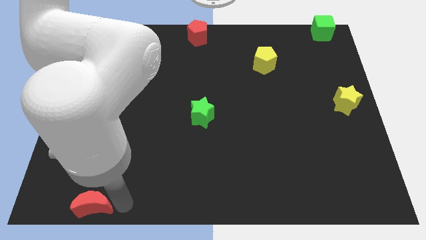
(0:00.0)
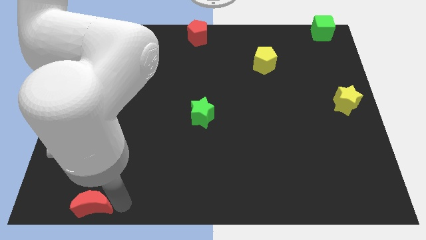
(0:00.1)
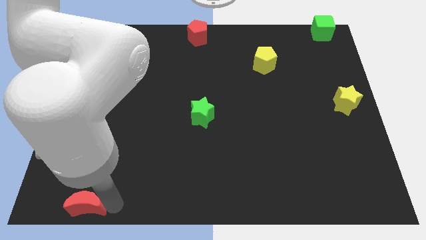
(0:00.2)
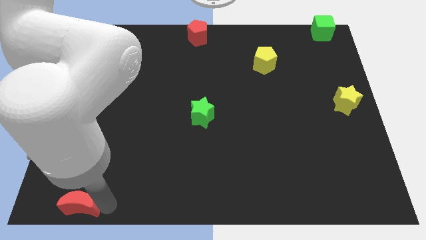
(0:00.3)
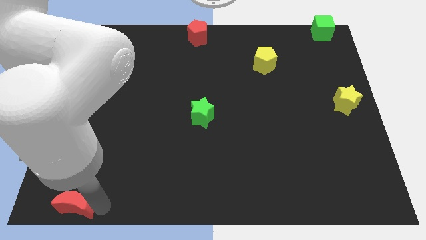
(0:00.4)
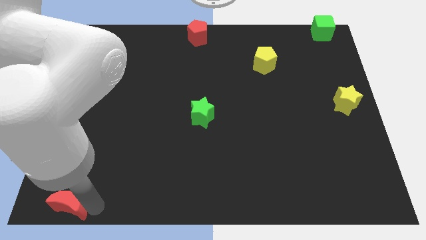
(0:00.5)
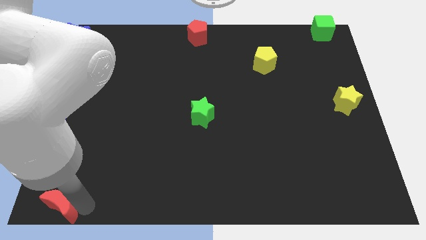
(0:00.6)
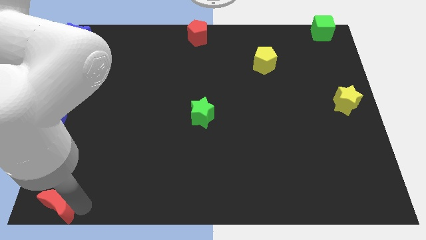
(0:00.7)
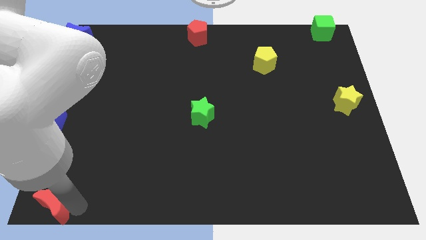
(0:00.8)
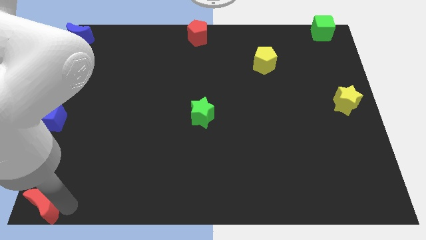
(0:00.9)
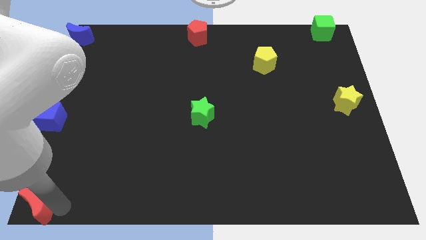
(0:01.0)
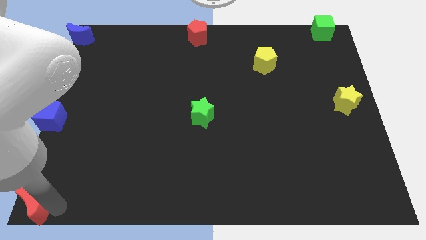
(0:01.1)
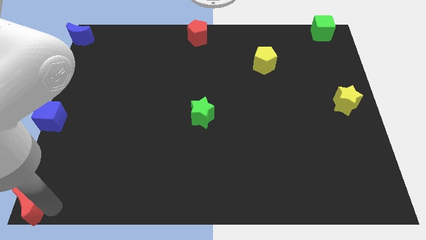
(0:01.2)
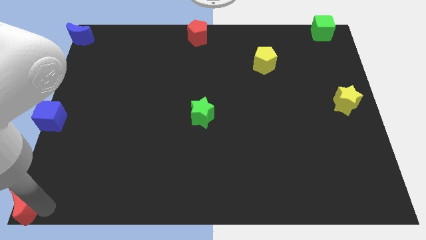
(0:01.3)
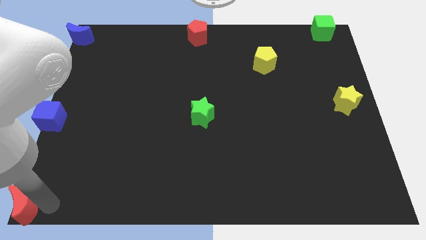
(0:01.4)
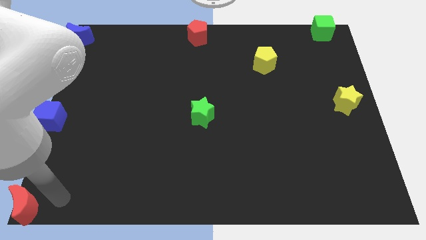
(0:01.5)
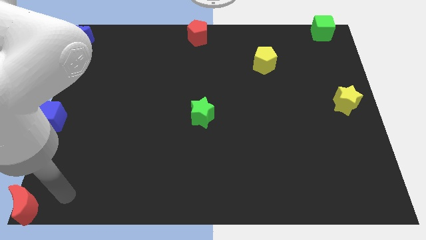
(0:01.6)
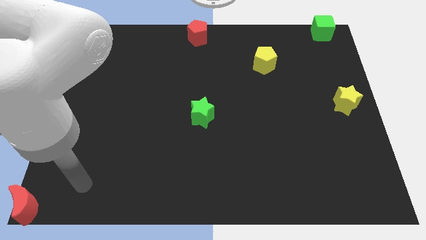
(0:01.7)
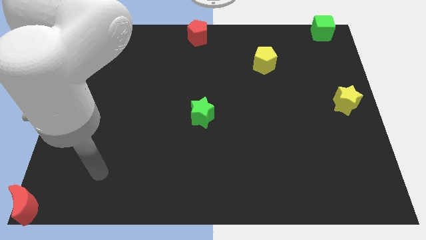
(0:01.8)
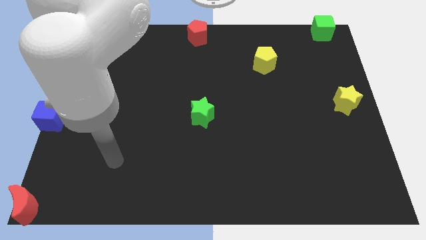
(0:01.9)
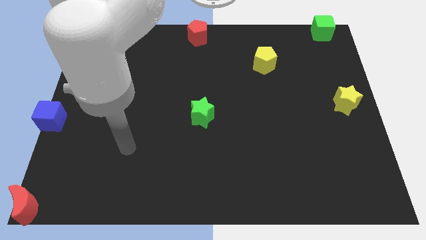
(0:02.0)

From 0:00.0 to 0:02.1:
place the red moon to the bottom left corner

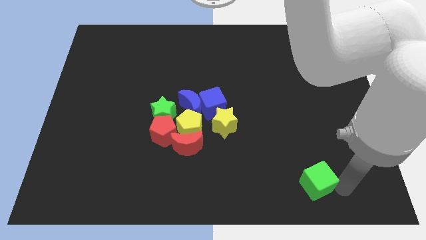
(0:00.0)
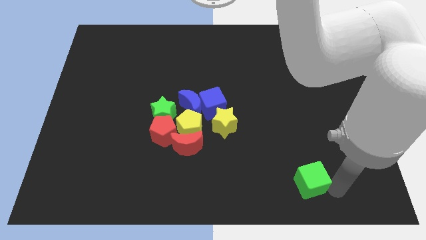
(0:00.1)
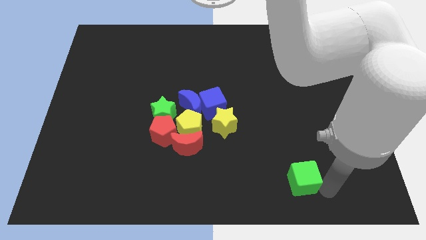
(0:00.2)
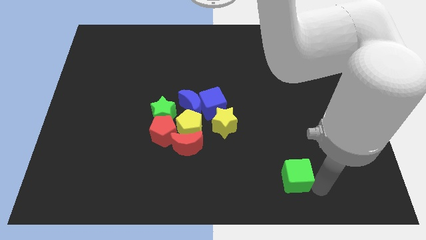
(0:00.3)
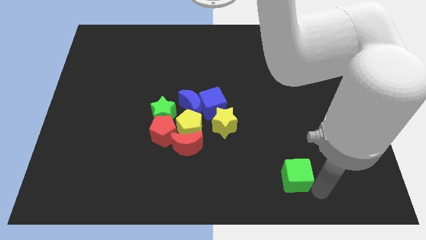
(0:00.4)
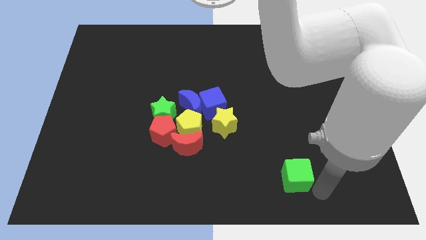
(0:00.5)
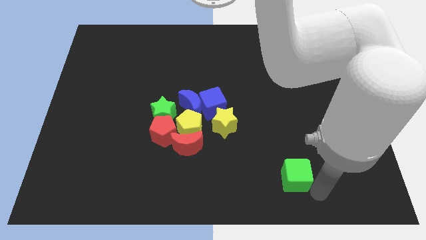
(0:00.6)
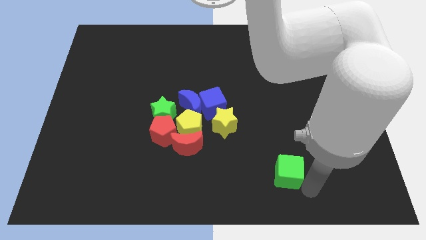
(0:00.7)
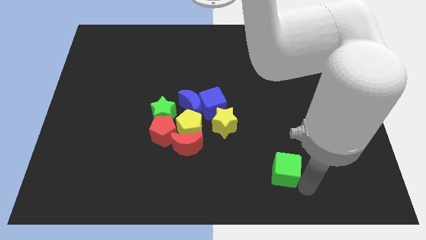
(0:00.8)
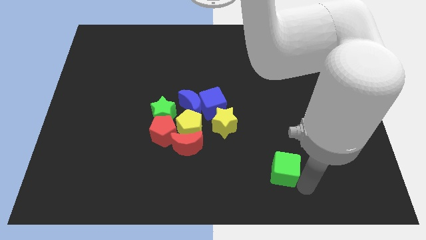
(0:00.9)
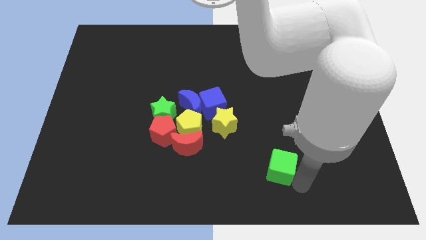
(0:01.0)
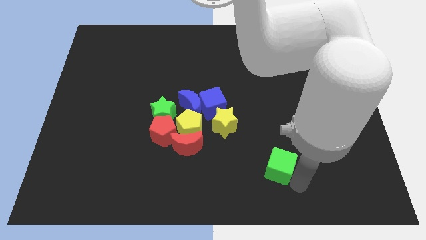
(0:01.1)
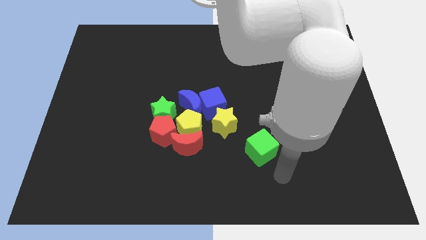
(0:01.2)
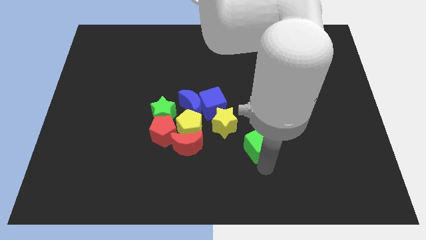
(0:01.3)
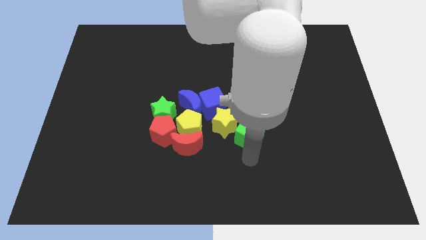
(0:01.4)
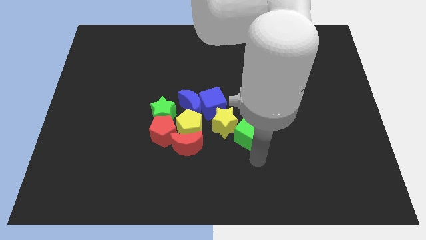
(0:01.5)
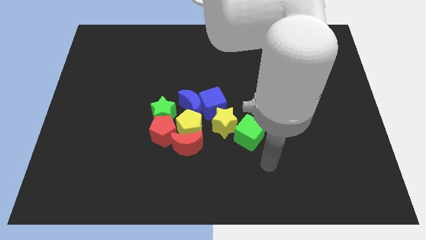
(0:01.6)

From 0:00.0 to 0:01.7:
move green cube towards the yellow star

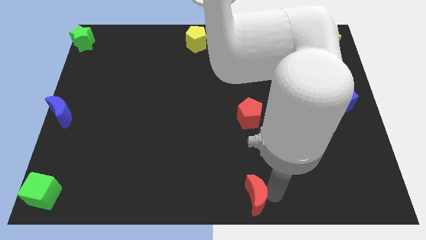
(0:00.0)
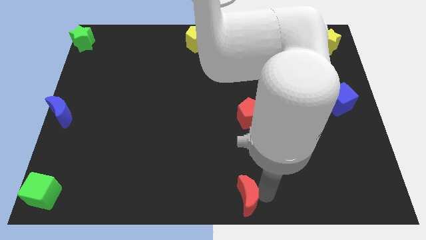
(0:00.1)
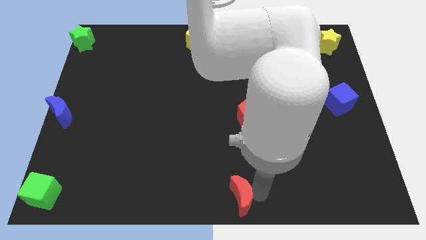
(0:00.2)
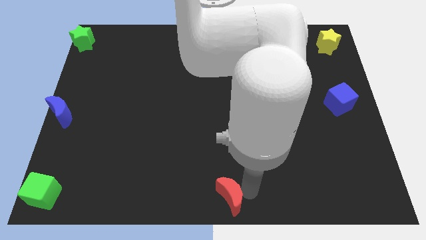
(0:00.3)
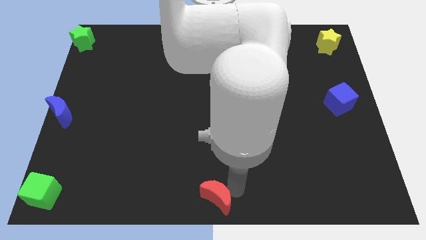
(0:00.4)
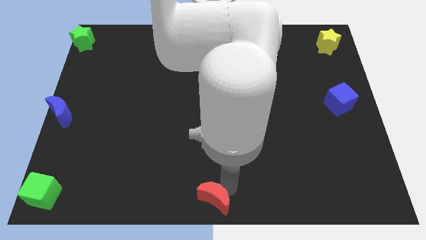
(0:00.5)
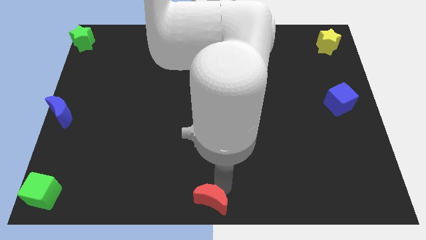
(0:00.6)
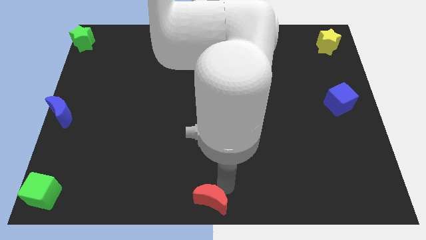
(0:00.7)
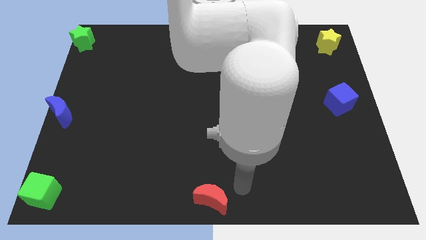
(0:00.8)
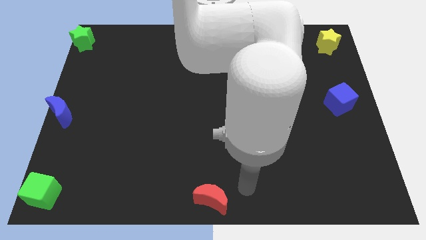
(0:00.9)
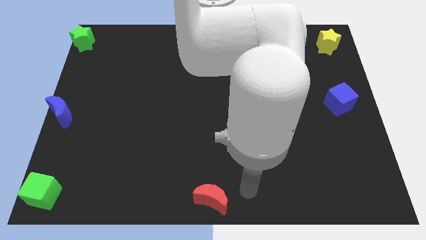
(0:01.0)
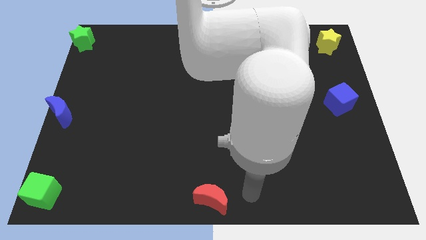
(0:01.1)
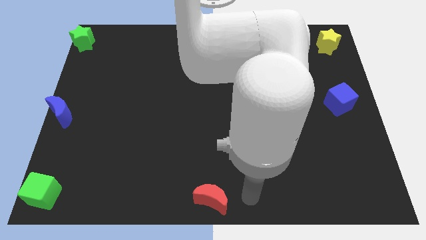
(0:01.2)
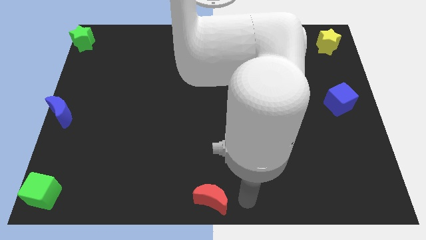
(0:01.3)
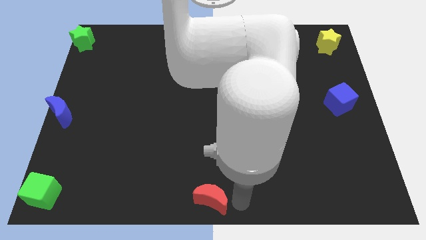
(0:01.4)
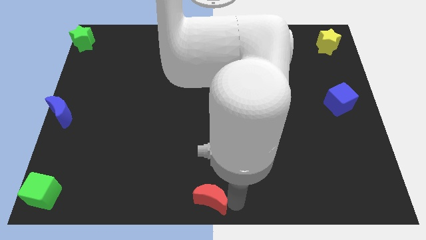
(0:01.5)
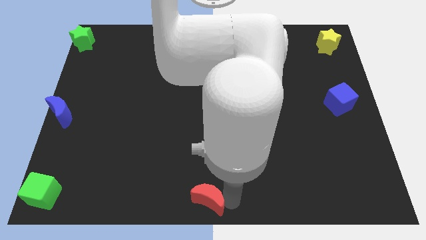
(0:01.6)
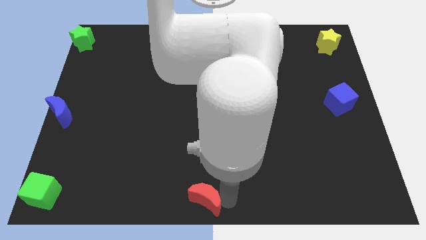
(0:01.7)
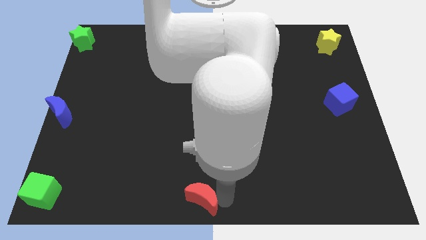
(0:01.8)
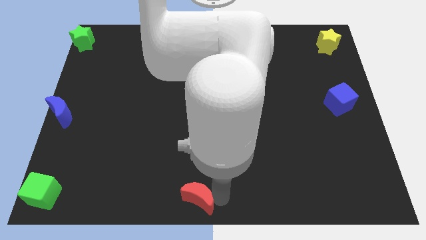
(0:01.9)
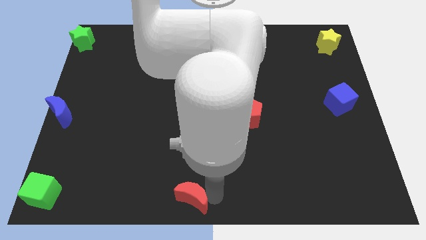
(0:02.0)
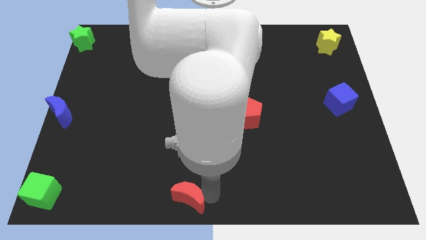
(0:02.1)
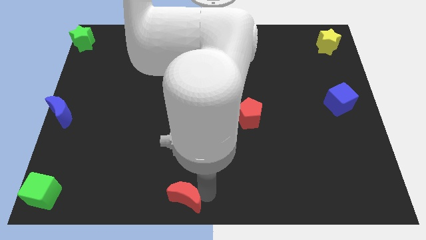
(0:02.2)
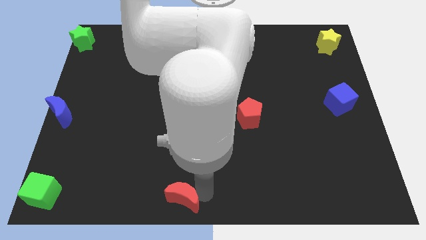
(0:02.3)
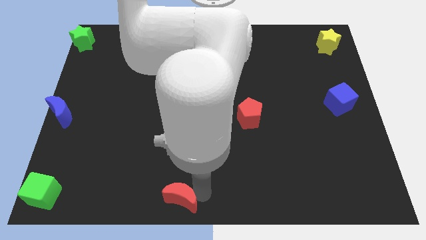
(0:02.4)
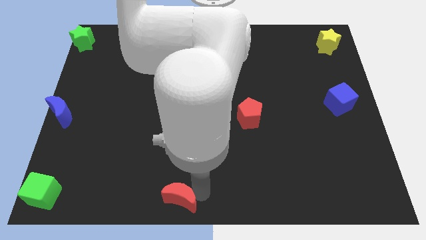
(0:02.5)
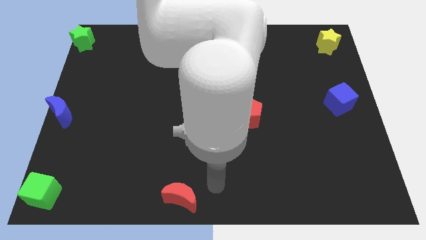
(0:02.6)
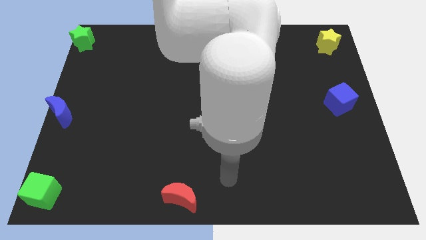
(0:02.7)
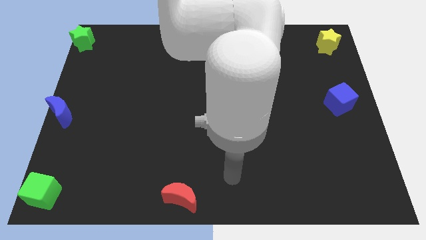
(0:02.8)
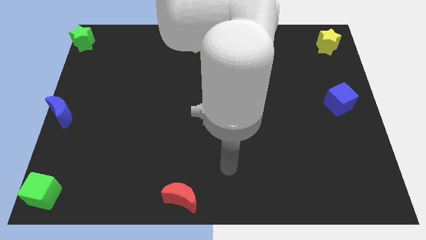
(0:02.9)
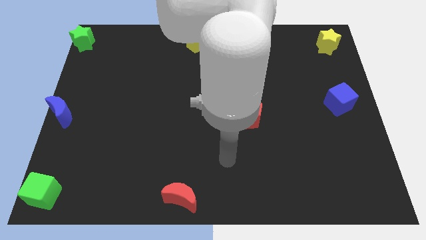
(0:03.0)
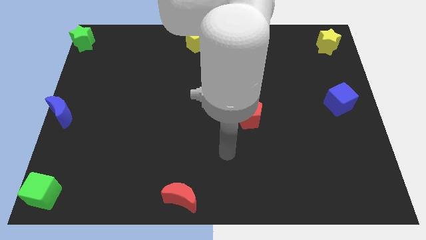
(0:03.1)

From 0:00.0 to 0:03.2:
move red pentagon slightly left

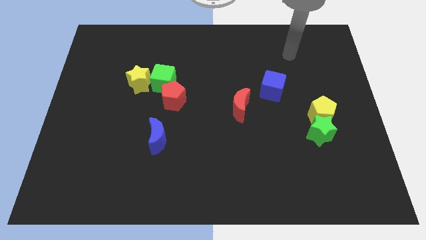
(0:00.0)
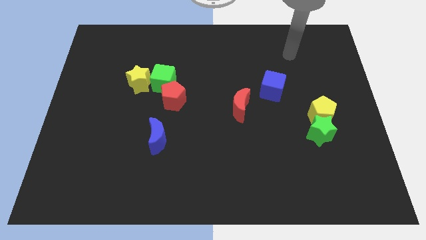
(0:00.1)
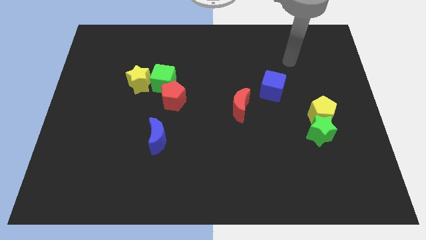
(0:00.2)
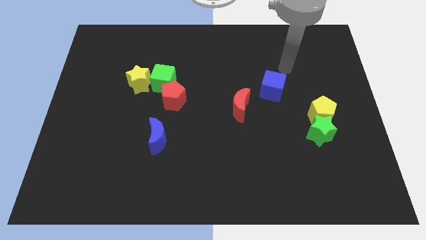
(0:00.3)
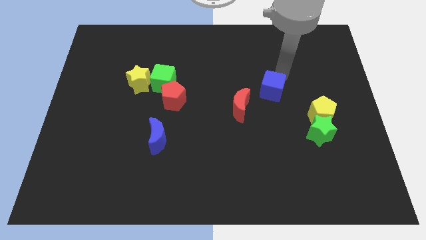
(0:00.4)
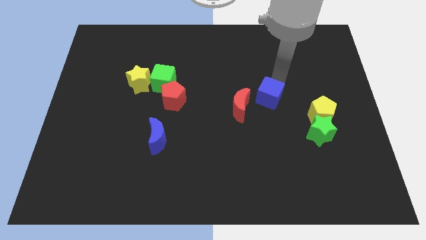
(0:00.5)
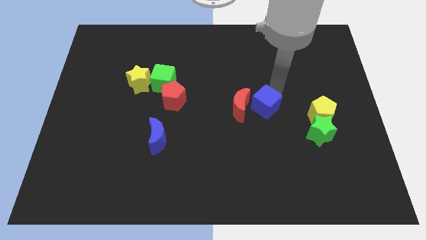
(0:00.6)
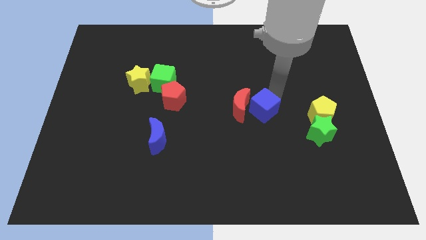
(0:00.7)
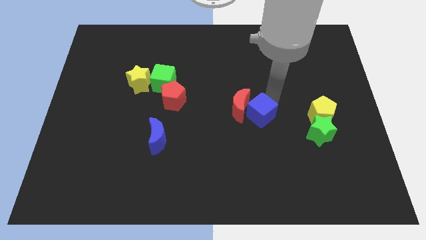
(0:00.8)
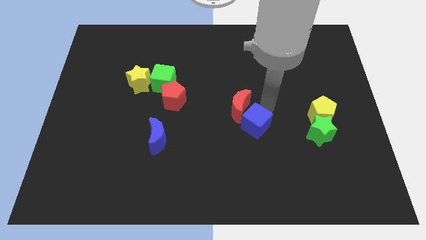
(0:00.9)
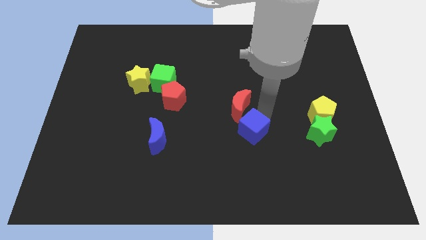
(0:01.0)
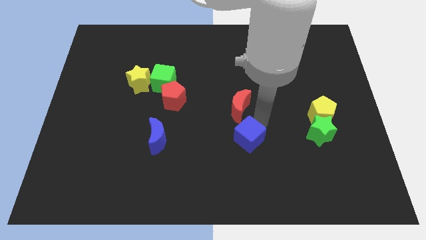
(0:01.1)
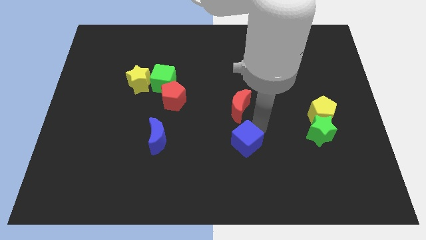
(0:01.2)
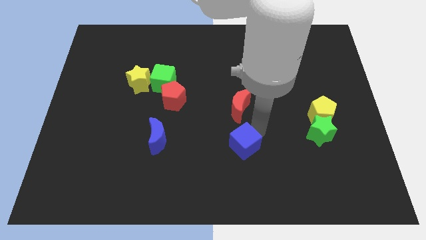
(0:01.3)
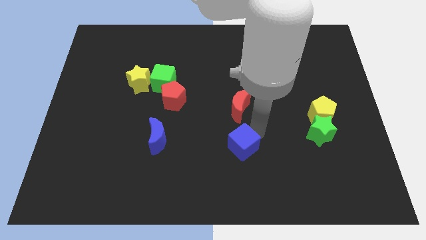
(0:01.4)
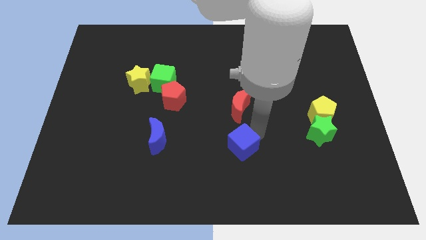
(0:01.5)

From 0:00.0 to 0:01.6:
place the blue cube to the right of the blue crescent

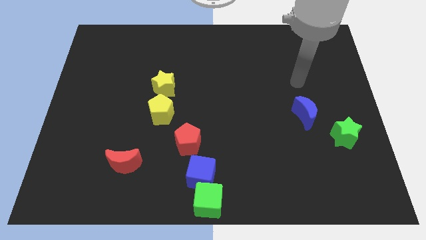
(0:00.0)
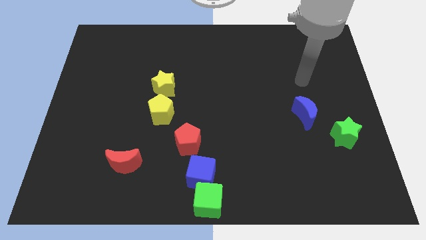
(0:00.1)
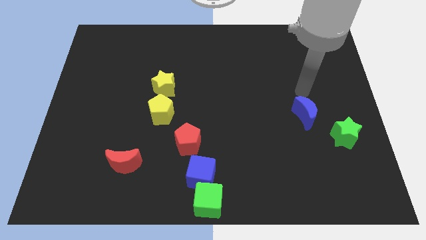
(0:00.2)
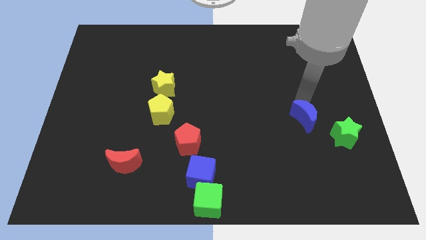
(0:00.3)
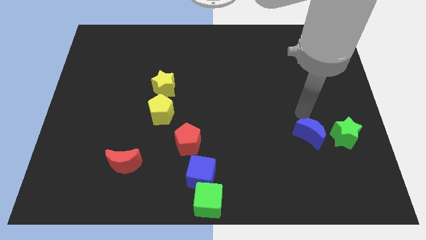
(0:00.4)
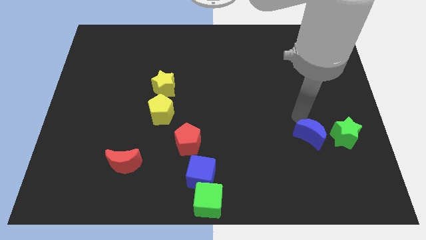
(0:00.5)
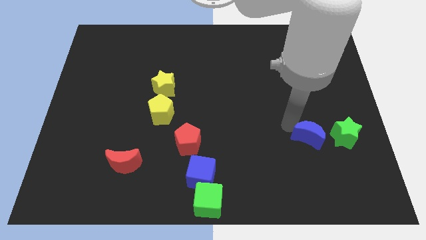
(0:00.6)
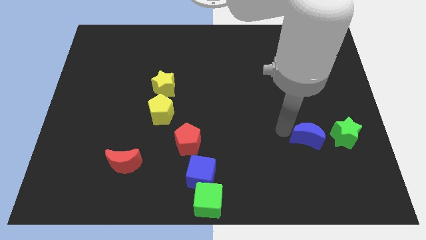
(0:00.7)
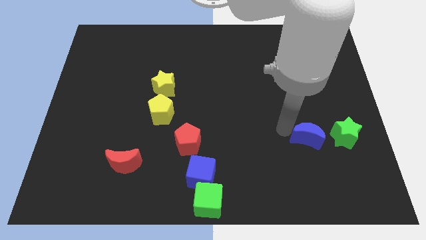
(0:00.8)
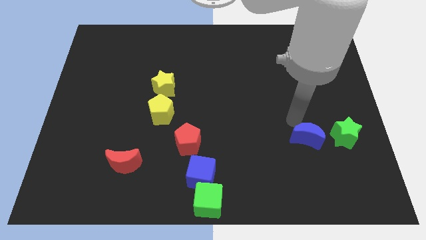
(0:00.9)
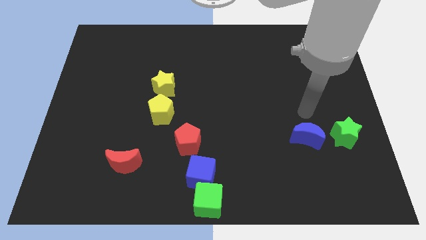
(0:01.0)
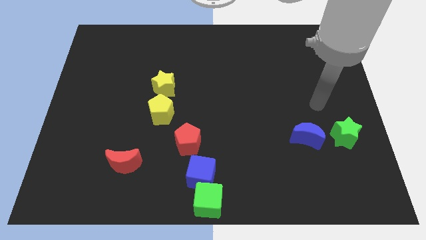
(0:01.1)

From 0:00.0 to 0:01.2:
move the blue crescent to the left of the green star
